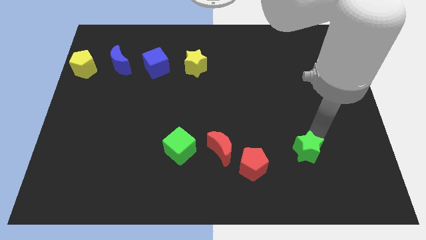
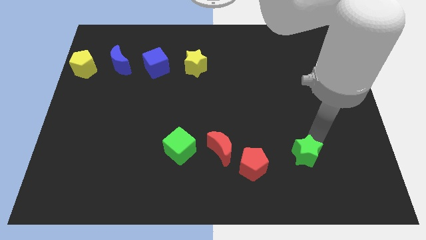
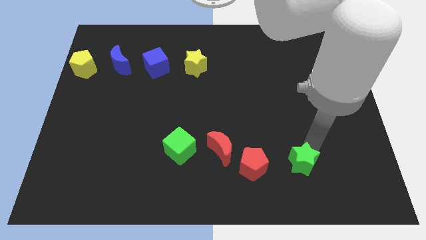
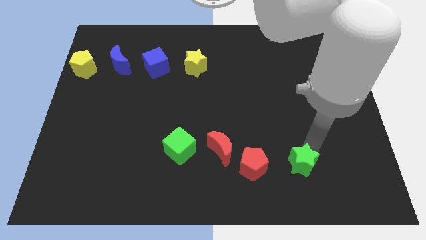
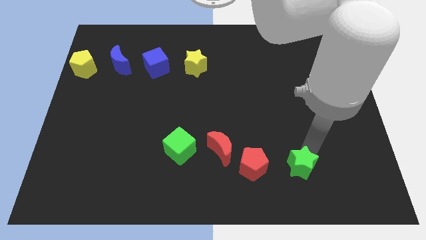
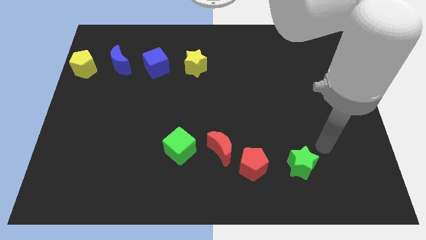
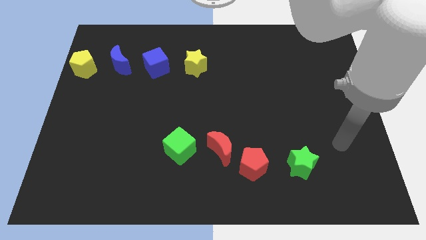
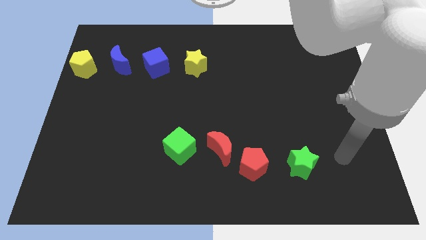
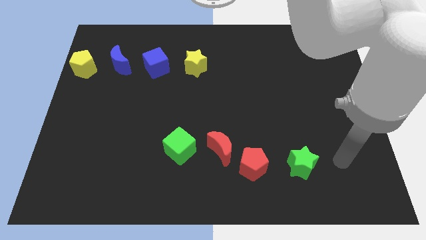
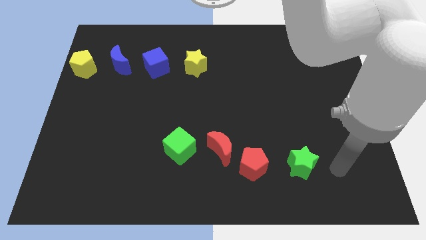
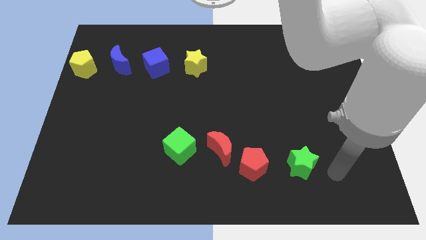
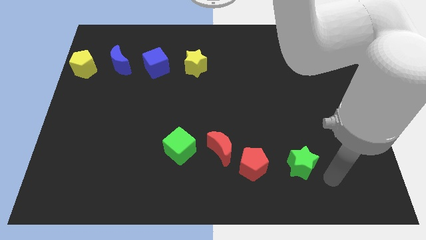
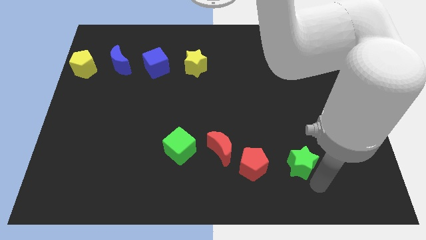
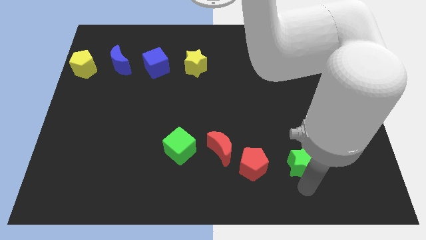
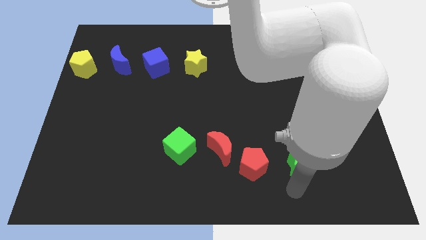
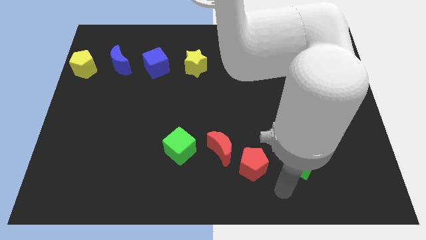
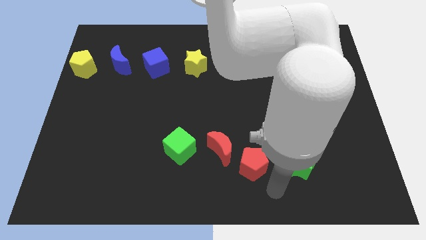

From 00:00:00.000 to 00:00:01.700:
place the green star at right side of the red pentagon

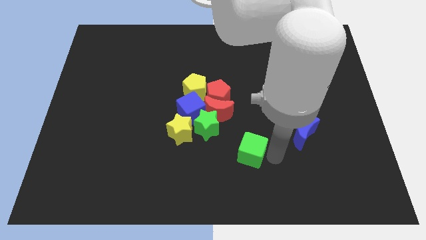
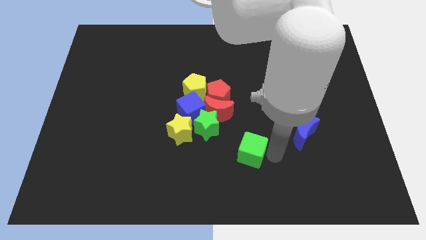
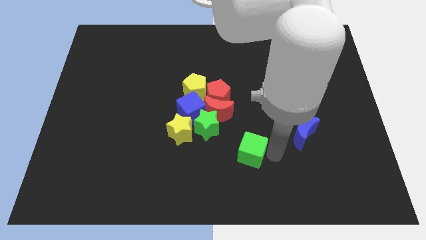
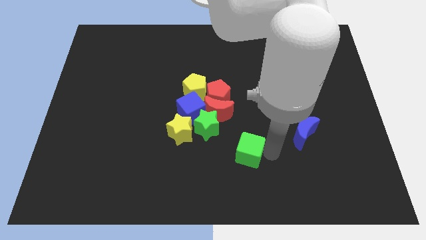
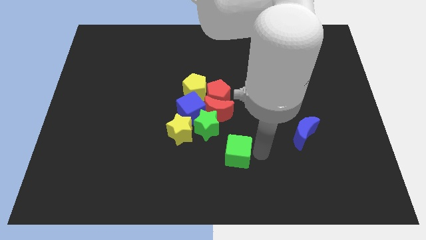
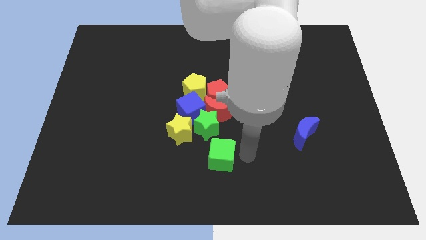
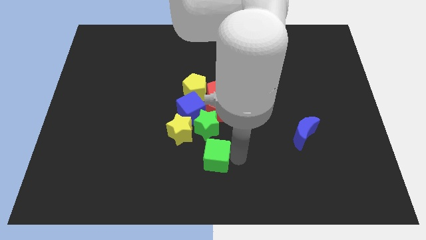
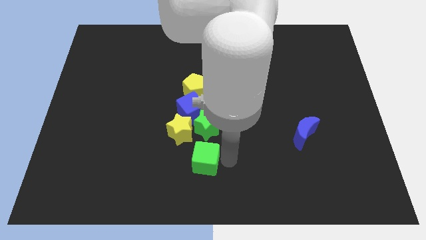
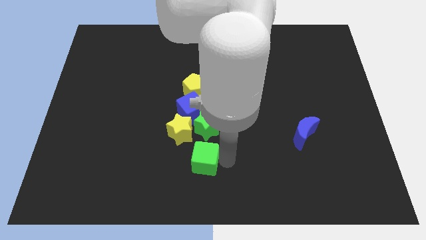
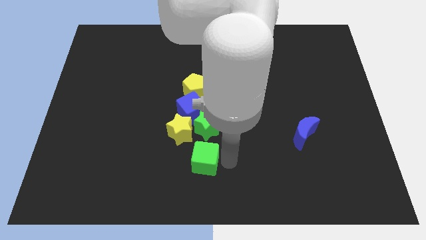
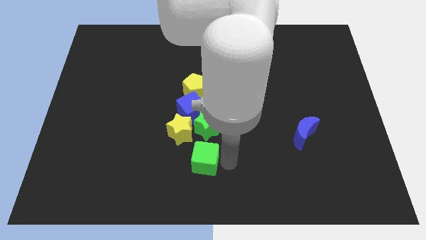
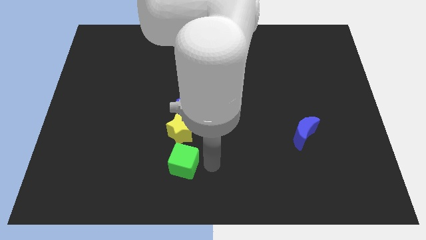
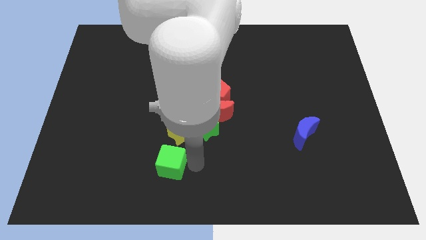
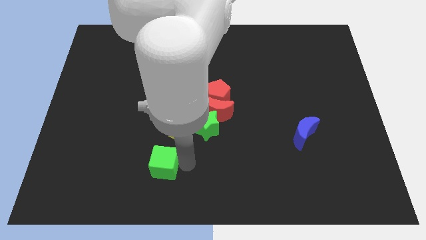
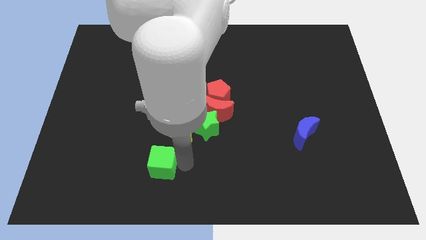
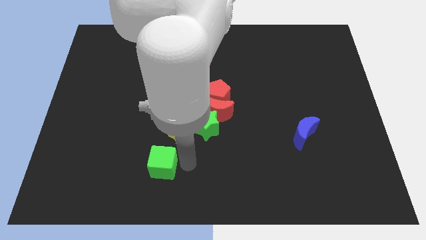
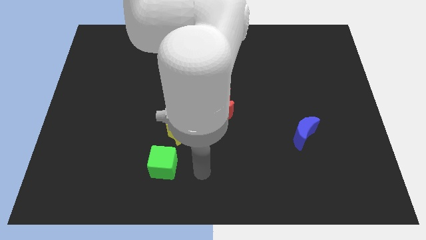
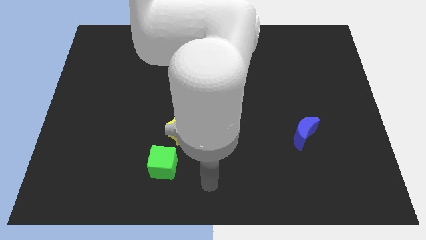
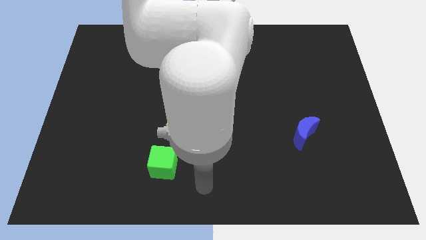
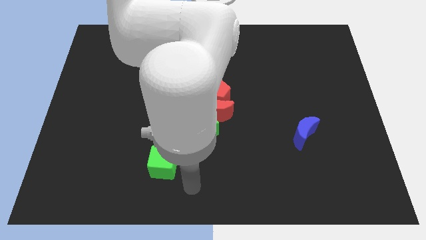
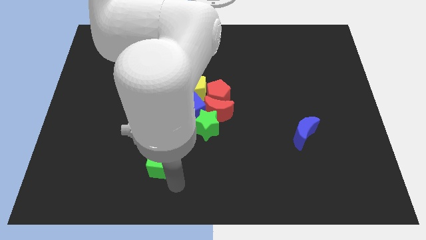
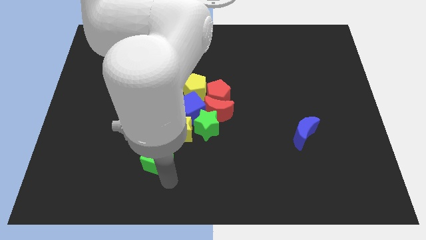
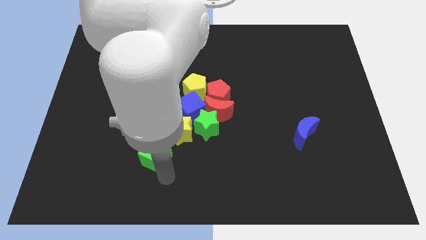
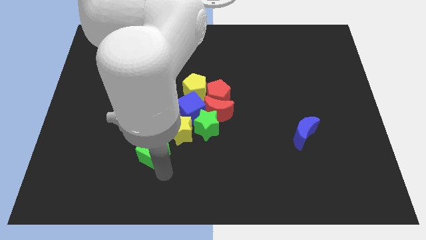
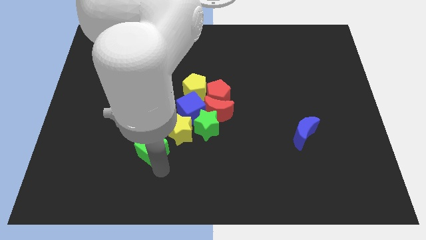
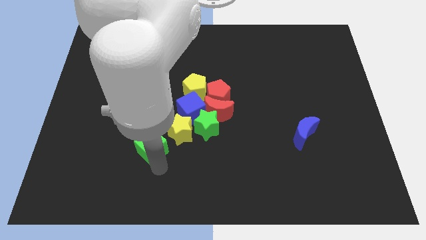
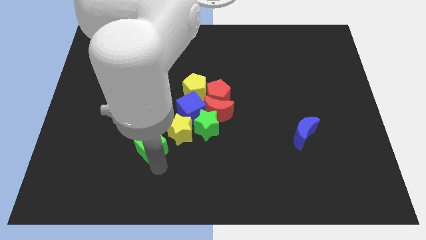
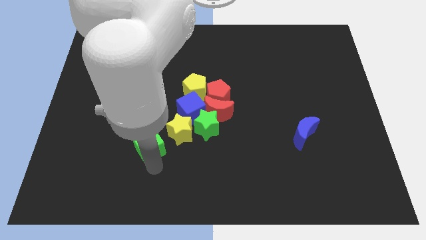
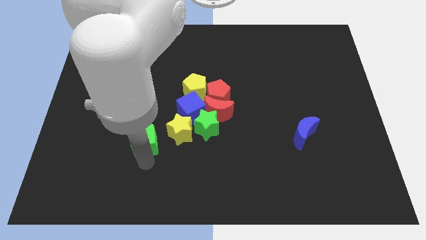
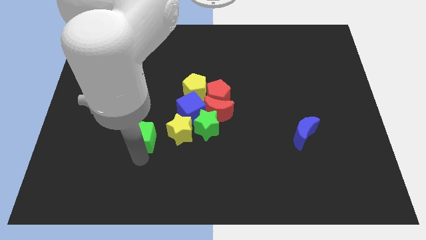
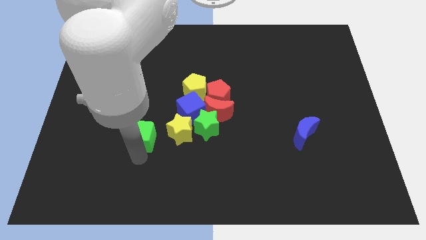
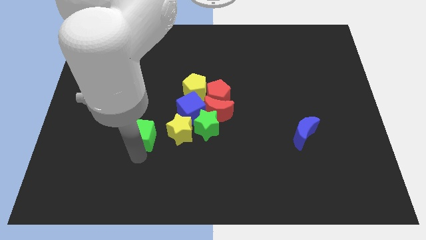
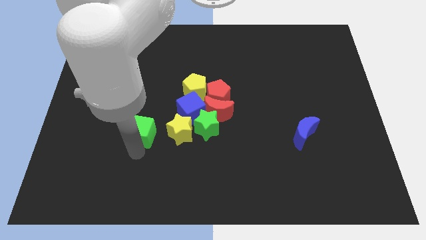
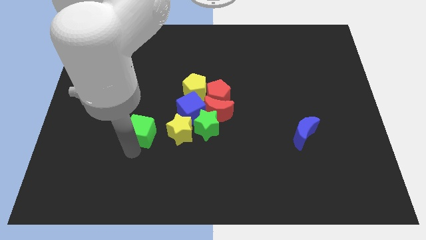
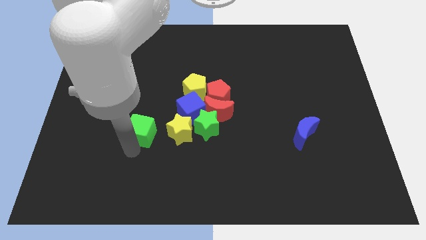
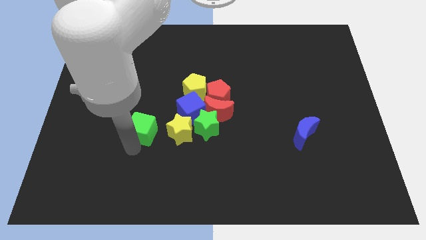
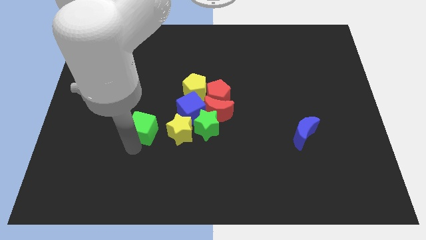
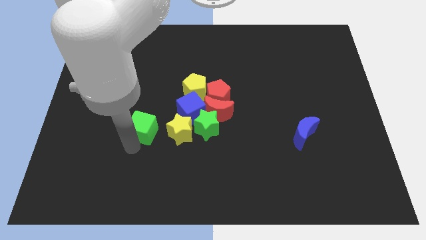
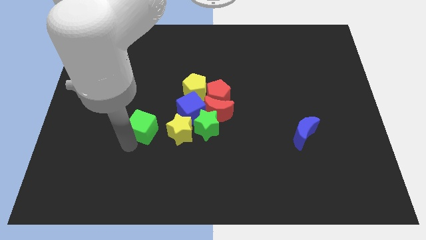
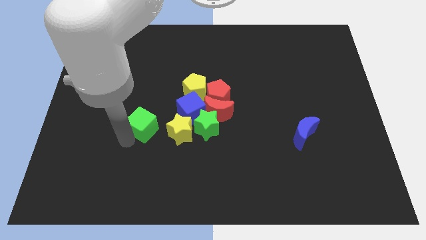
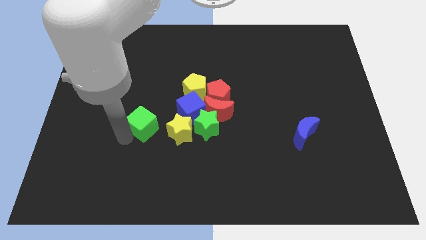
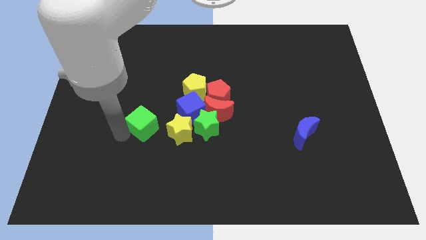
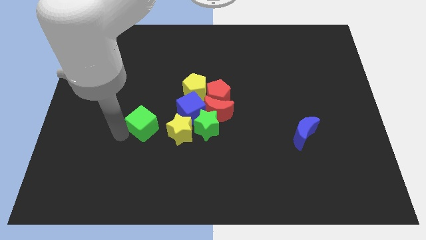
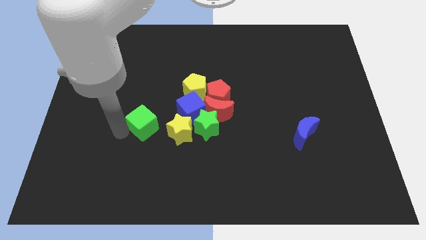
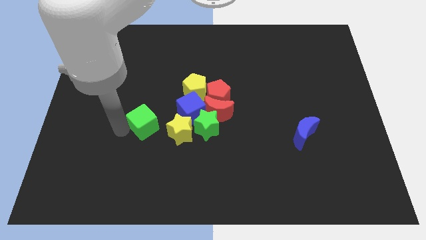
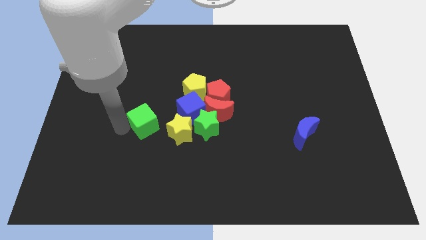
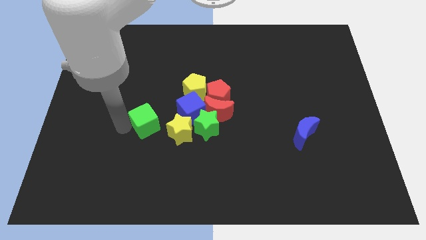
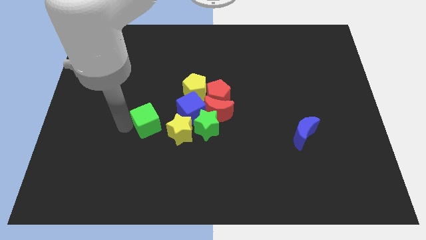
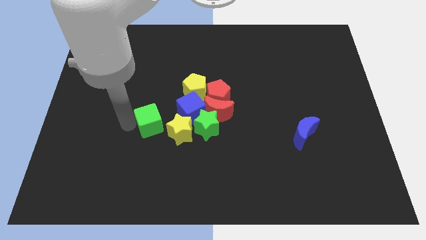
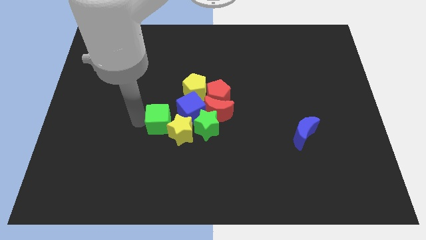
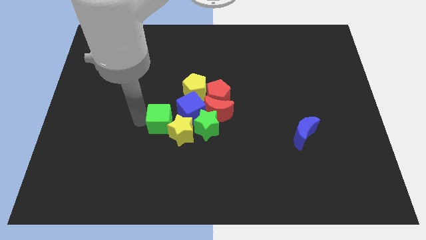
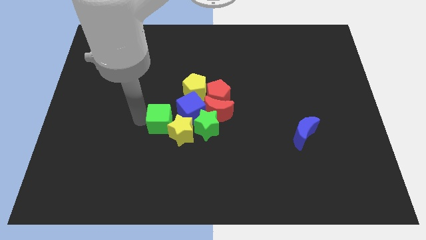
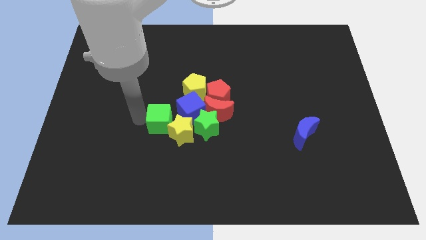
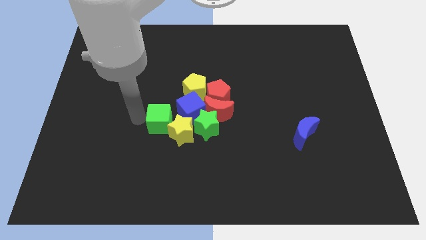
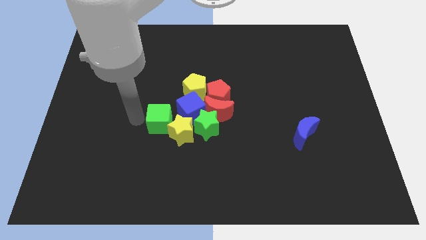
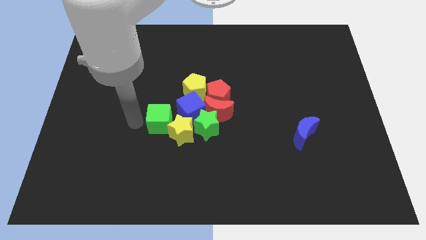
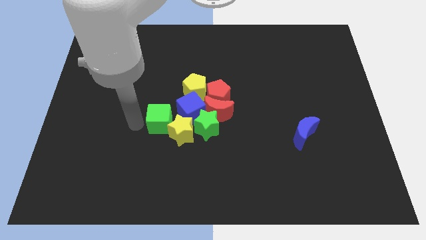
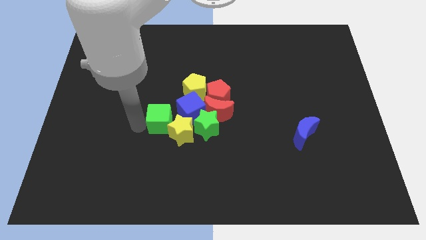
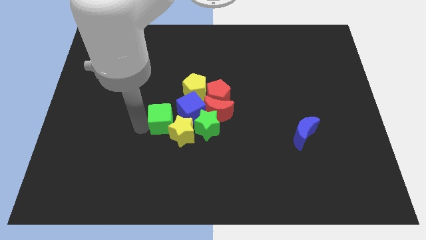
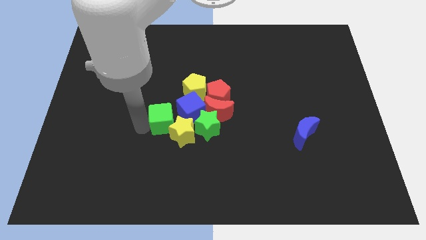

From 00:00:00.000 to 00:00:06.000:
move the green cube into the yellow star

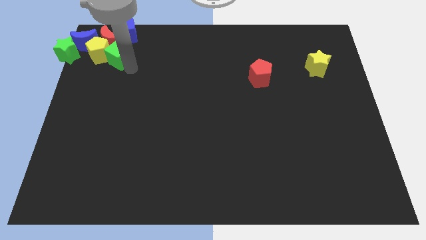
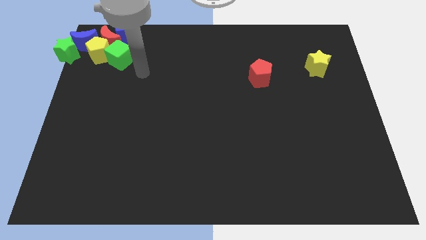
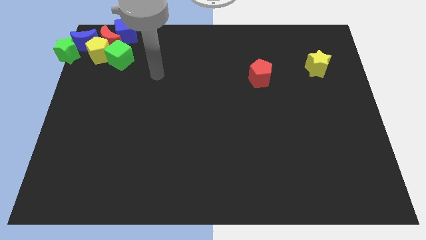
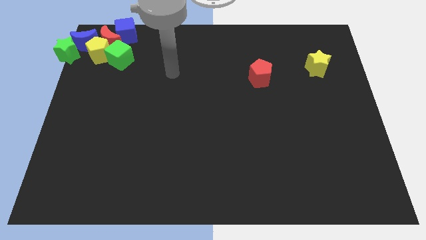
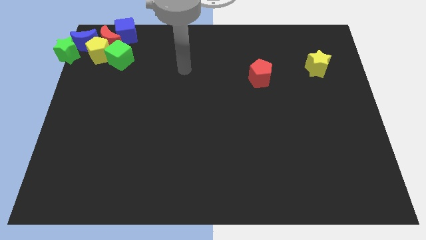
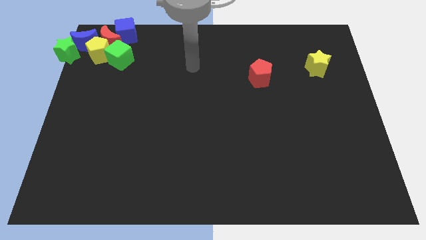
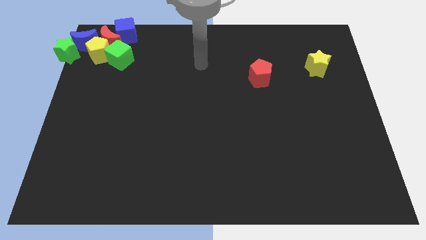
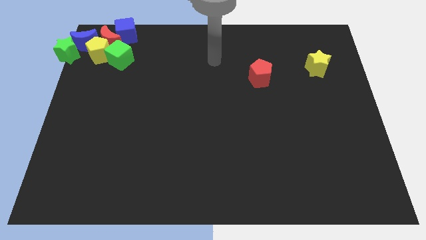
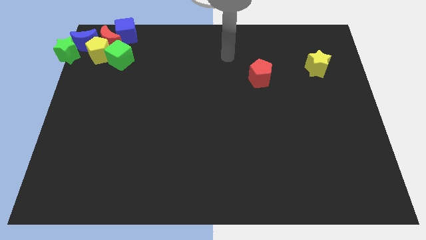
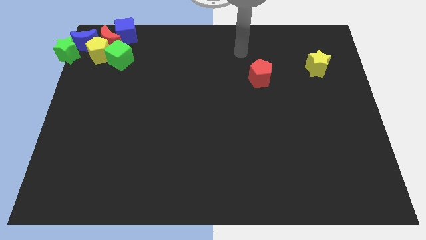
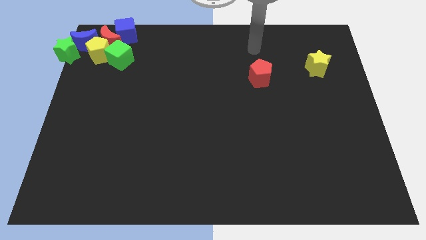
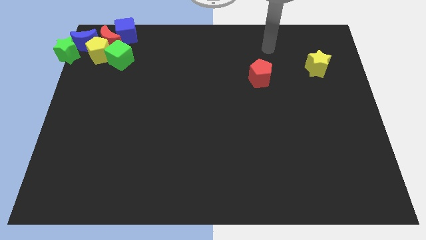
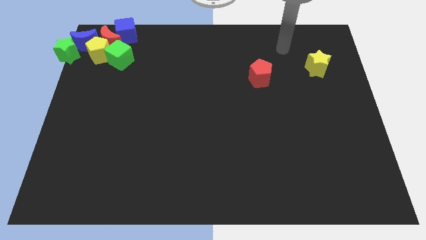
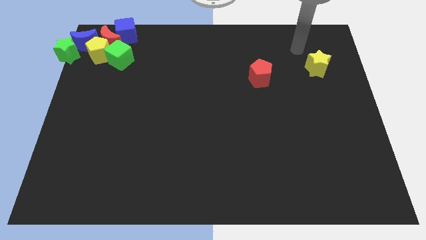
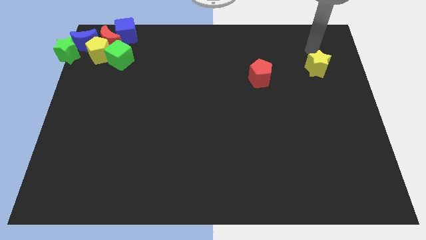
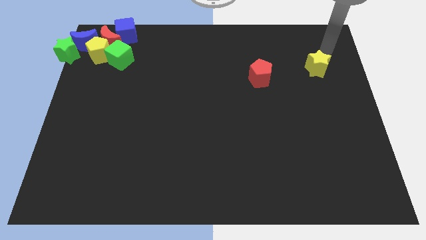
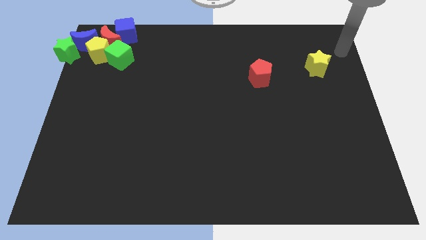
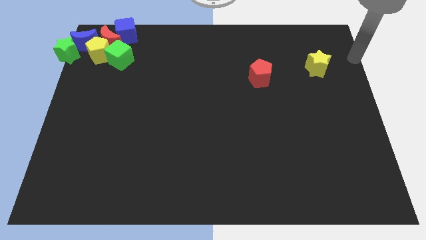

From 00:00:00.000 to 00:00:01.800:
move the arm to the top of the yellow star
